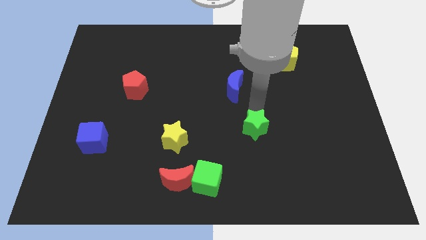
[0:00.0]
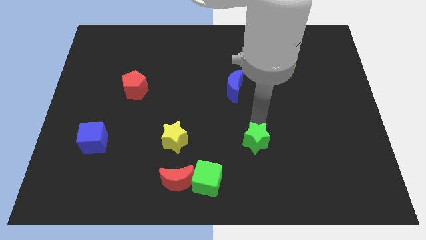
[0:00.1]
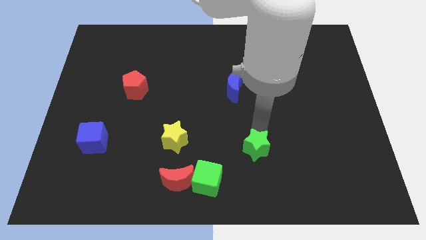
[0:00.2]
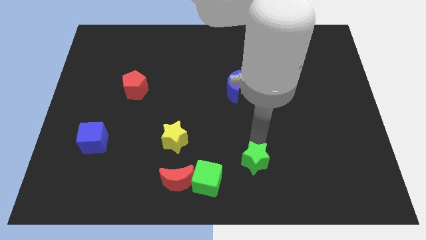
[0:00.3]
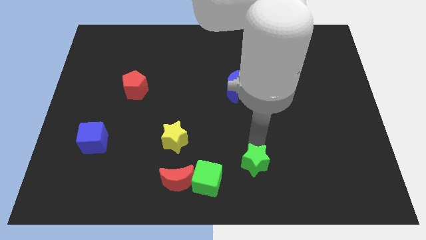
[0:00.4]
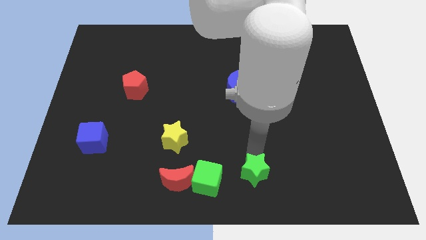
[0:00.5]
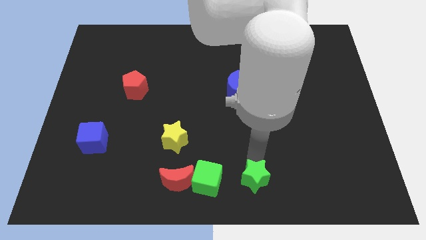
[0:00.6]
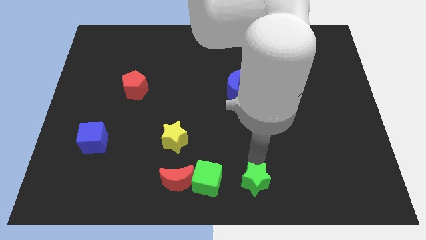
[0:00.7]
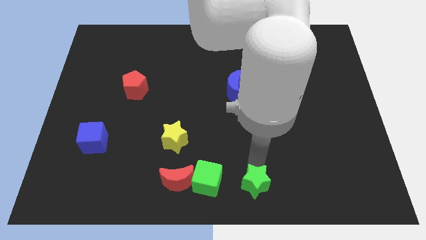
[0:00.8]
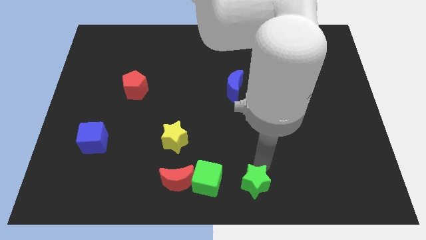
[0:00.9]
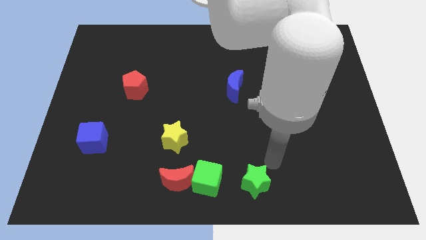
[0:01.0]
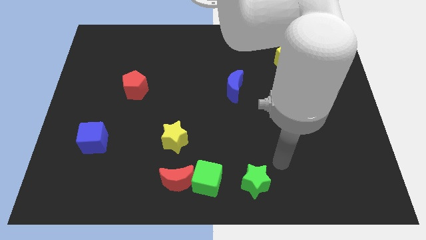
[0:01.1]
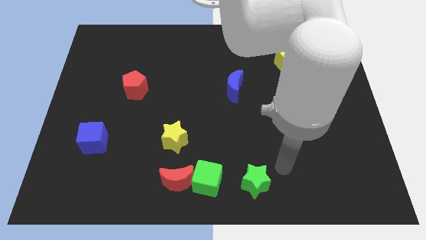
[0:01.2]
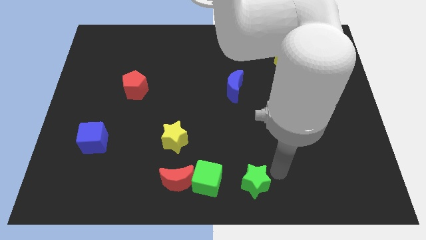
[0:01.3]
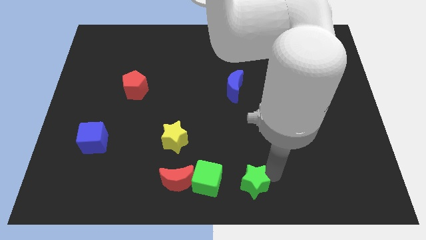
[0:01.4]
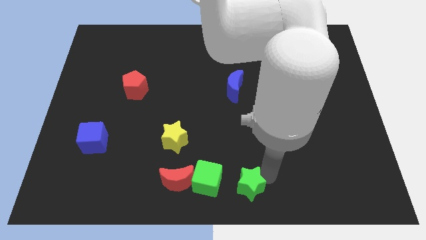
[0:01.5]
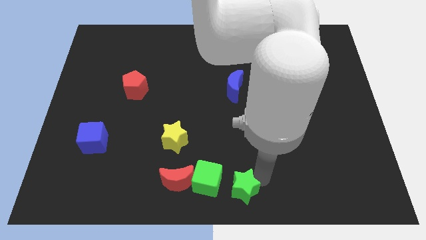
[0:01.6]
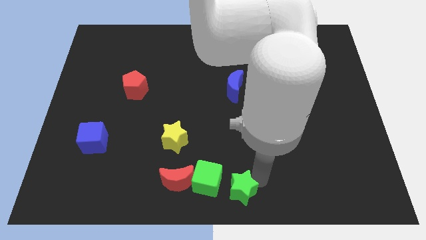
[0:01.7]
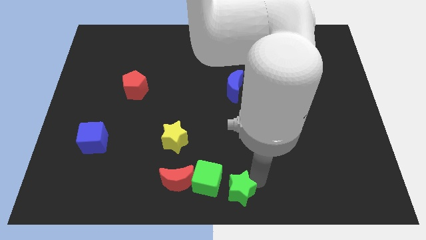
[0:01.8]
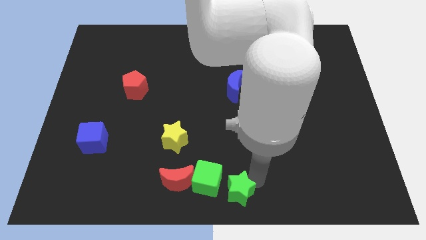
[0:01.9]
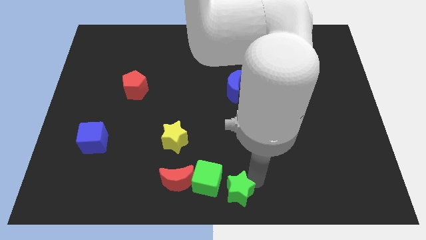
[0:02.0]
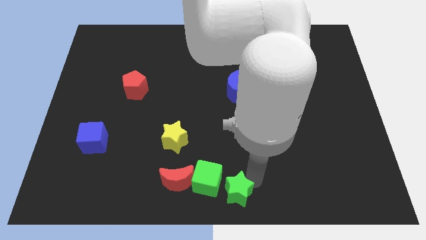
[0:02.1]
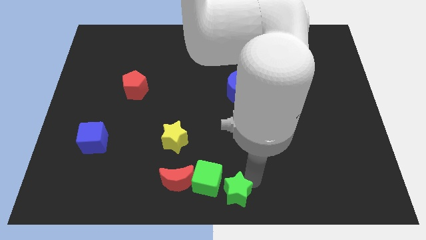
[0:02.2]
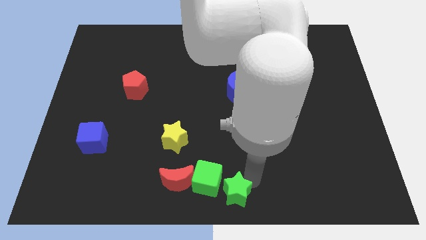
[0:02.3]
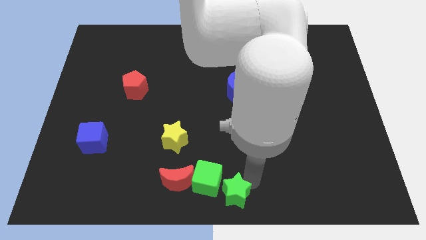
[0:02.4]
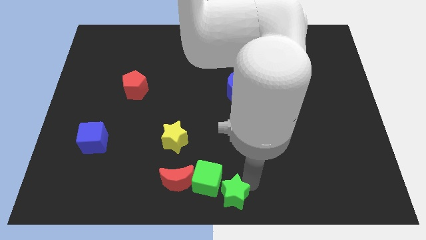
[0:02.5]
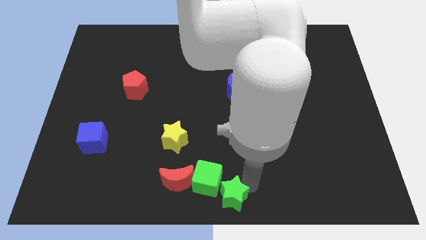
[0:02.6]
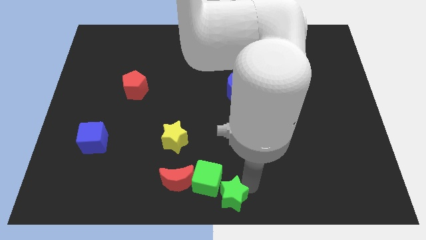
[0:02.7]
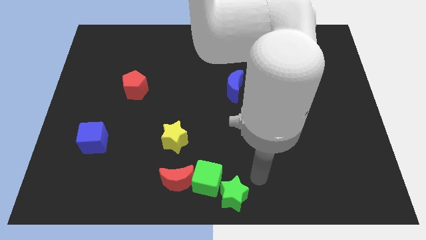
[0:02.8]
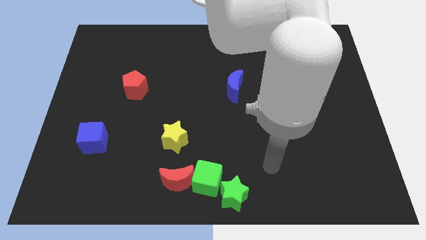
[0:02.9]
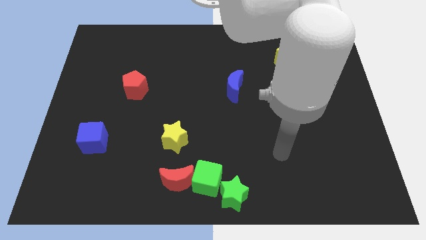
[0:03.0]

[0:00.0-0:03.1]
move the green star to the bottom center of the board

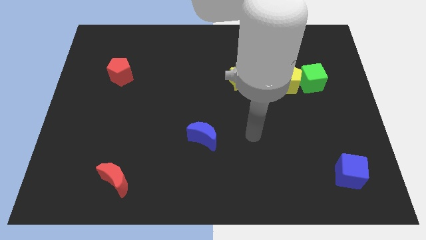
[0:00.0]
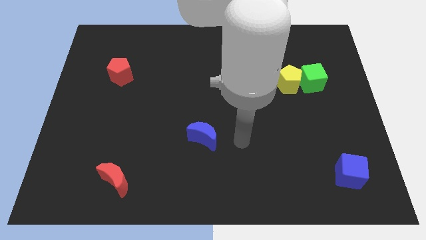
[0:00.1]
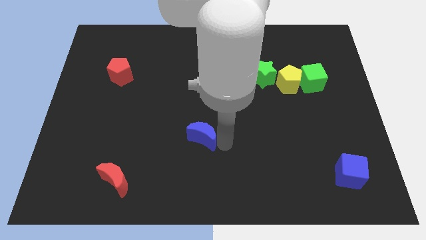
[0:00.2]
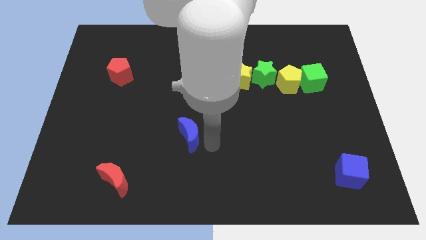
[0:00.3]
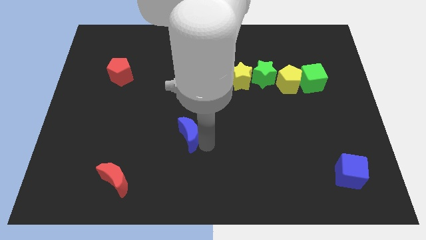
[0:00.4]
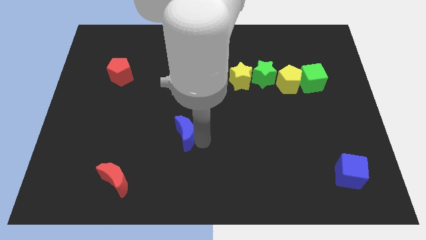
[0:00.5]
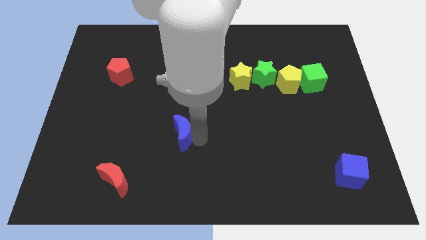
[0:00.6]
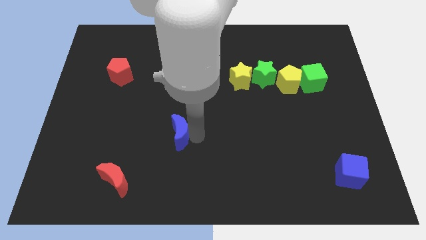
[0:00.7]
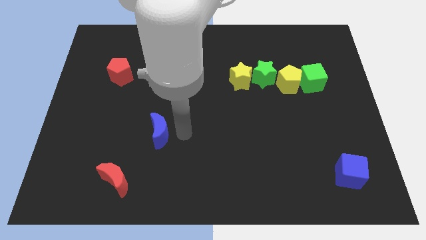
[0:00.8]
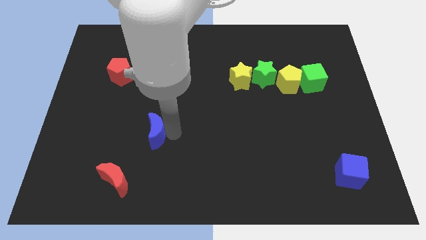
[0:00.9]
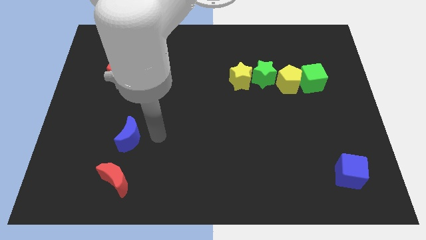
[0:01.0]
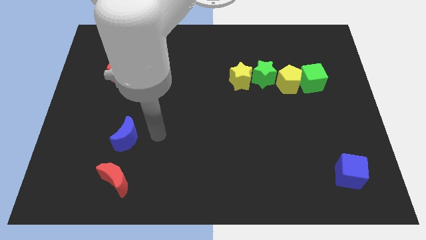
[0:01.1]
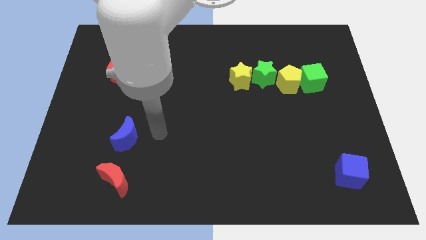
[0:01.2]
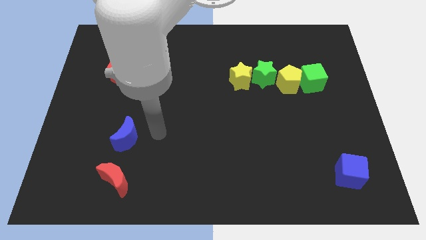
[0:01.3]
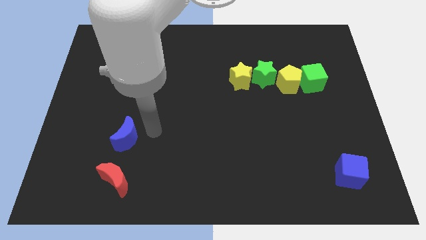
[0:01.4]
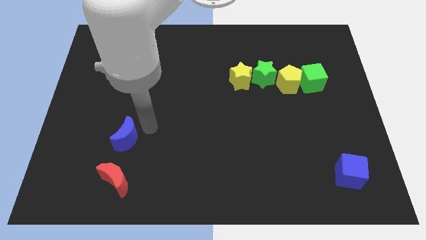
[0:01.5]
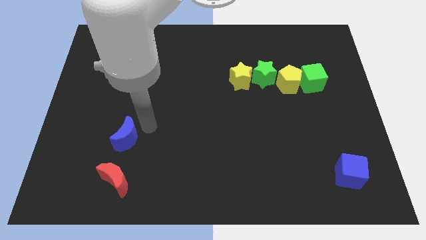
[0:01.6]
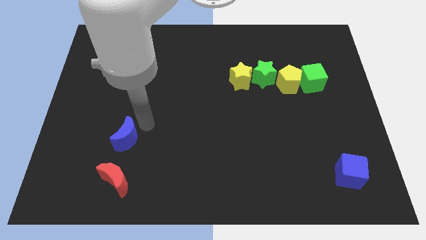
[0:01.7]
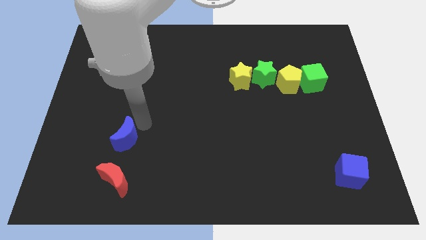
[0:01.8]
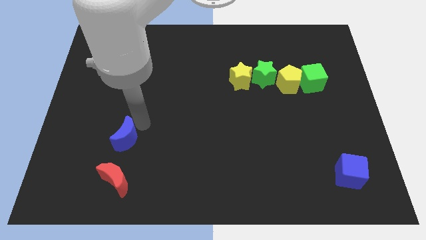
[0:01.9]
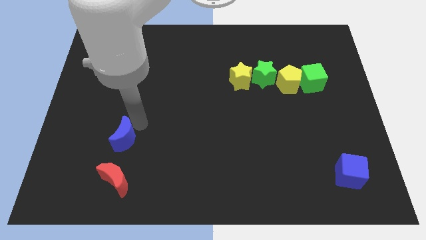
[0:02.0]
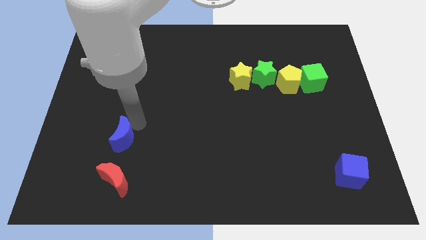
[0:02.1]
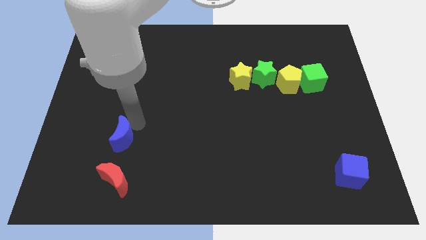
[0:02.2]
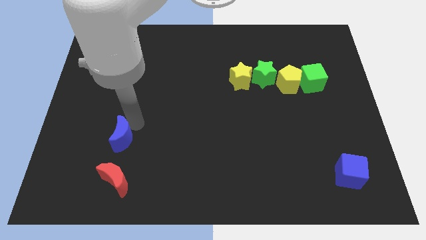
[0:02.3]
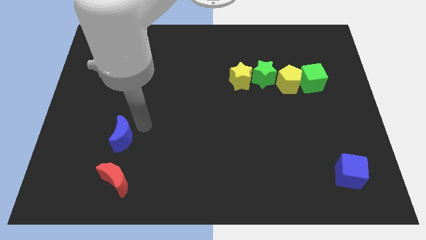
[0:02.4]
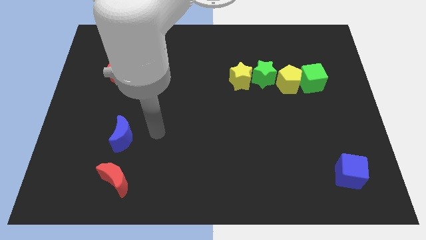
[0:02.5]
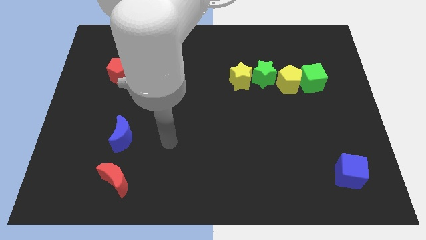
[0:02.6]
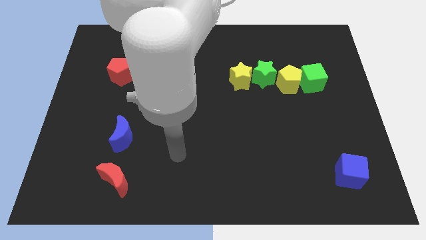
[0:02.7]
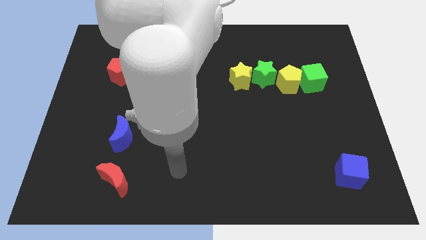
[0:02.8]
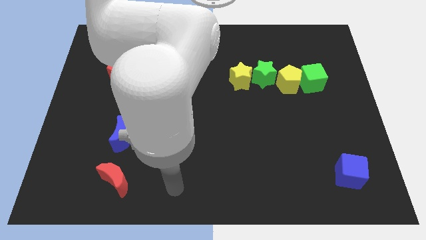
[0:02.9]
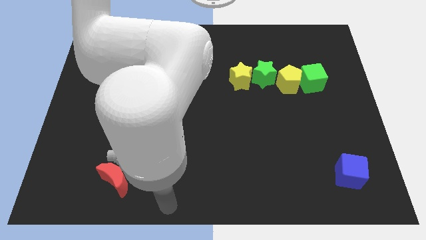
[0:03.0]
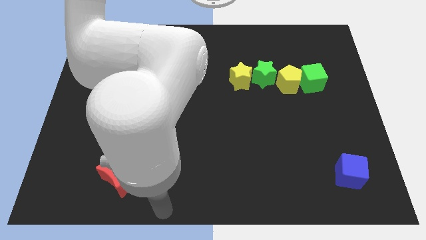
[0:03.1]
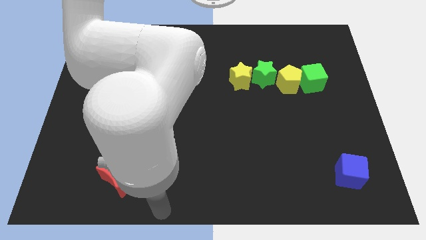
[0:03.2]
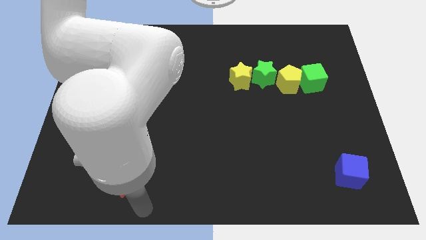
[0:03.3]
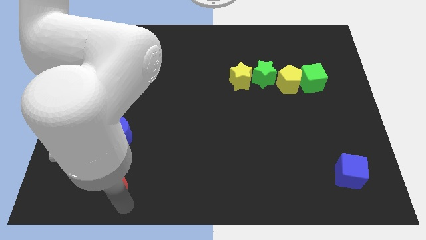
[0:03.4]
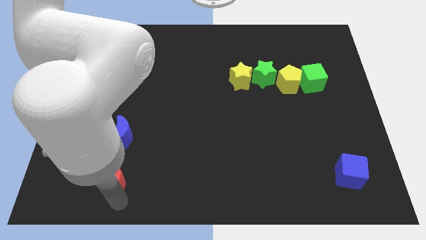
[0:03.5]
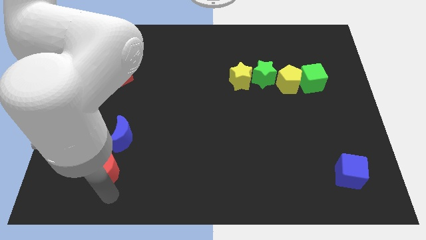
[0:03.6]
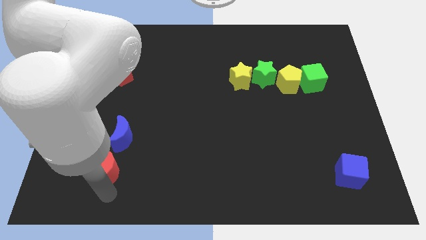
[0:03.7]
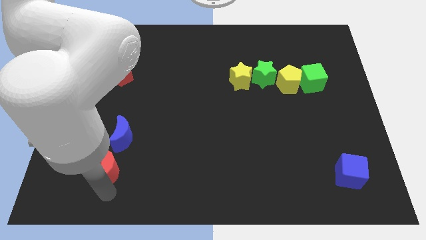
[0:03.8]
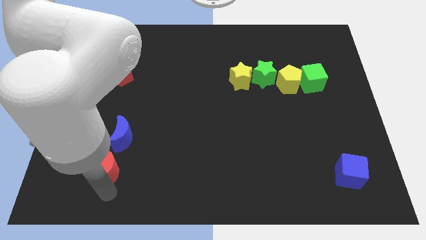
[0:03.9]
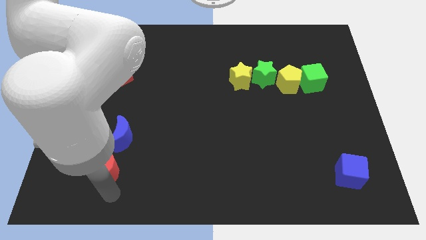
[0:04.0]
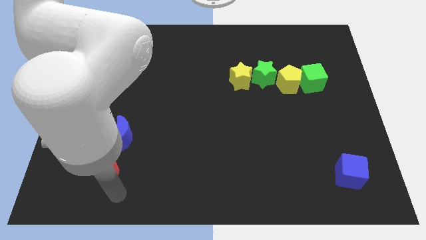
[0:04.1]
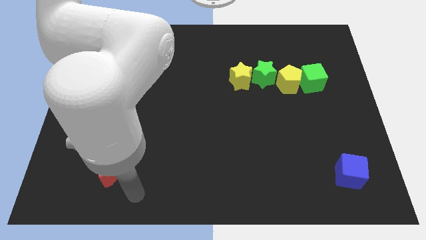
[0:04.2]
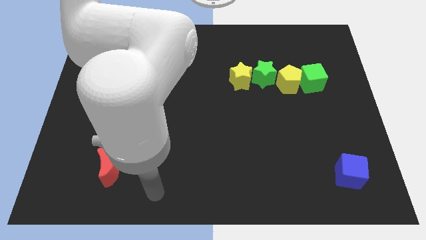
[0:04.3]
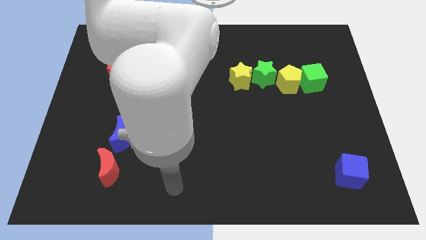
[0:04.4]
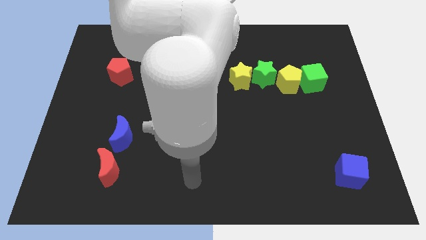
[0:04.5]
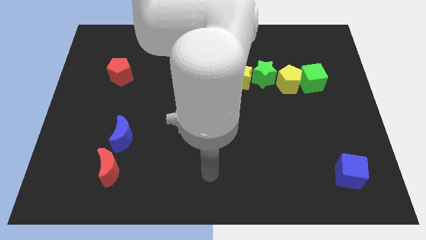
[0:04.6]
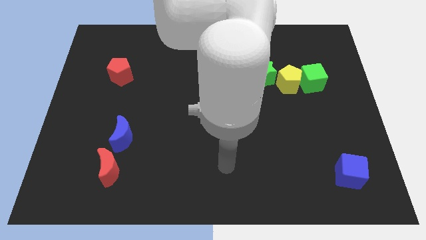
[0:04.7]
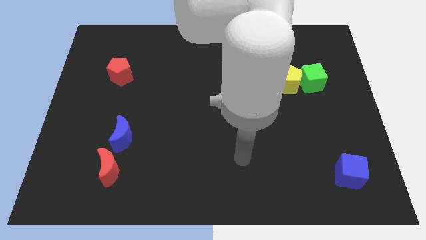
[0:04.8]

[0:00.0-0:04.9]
place the blue crescent to the top of the red moon

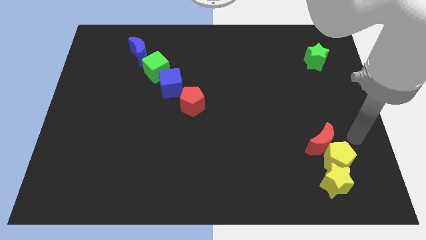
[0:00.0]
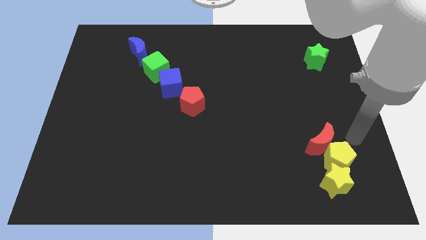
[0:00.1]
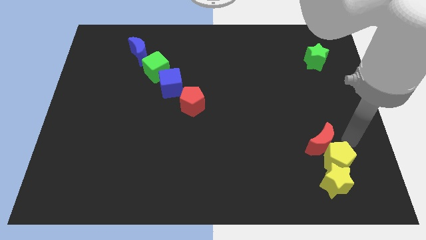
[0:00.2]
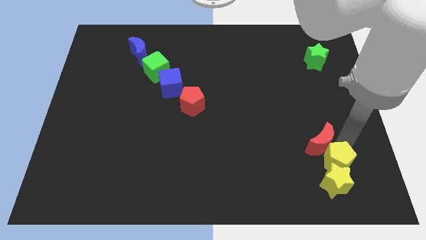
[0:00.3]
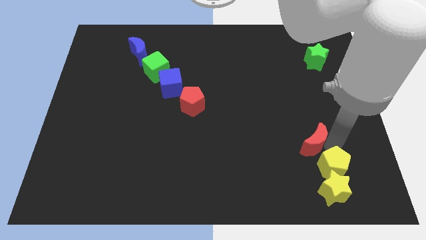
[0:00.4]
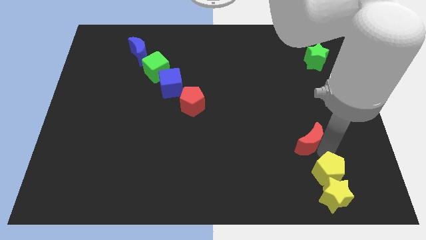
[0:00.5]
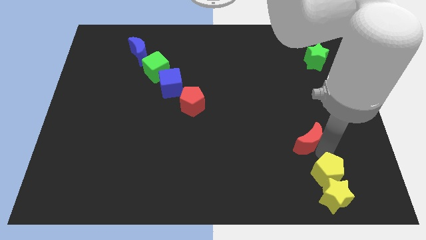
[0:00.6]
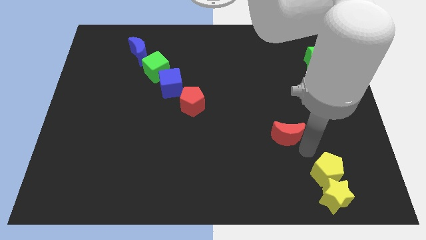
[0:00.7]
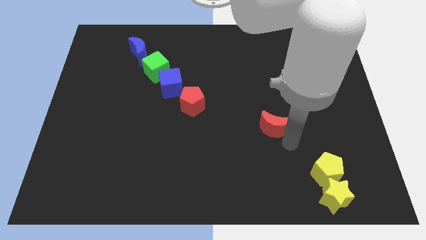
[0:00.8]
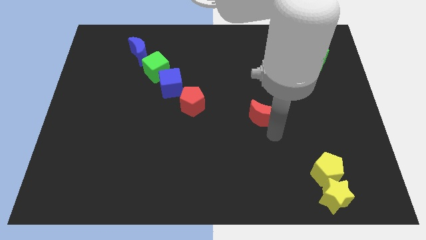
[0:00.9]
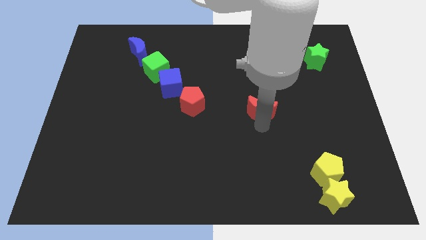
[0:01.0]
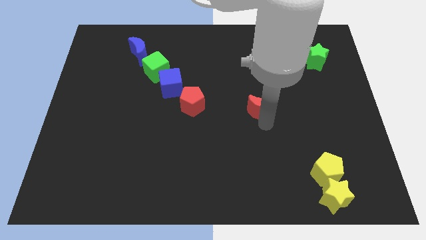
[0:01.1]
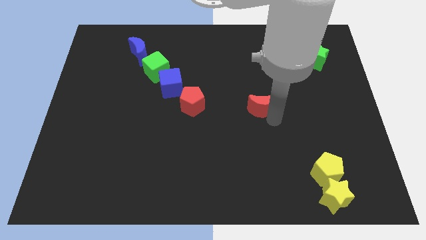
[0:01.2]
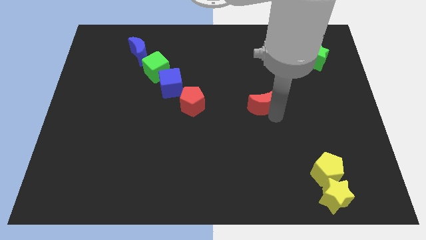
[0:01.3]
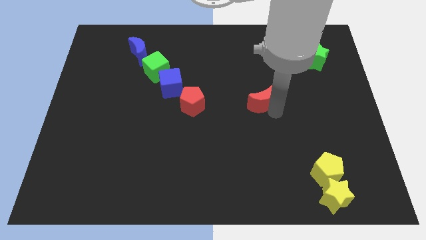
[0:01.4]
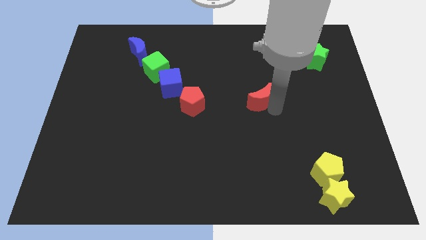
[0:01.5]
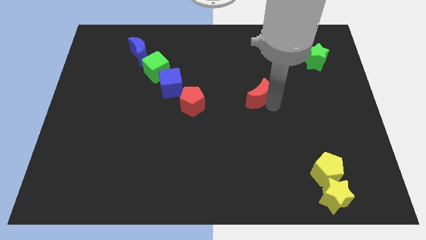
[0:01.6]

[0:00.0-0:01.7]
separate the red moon from the yellow pentagon
